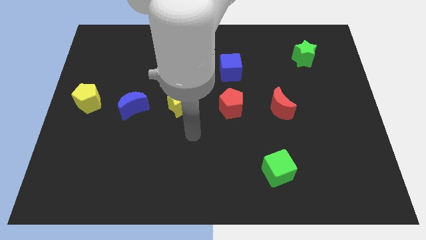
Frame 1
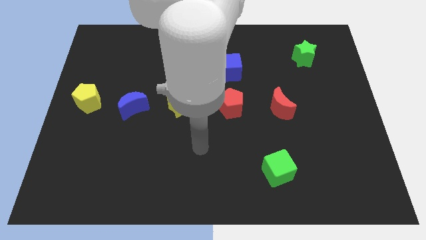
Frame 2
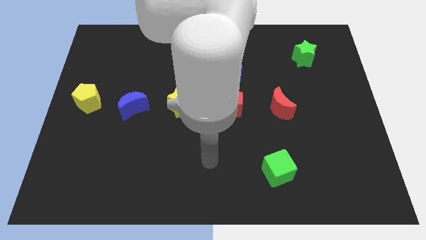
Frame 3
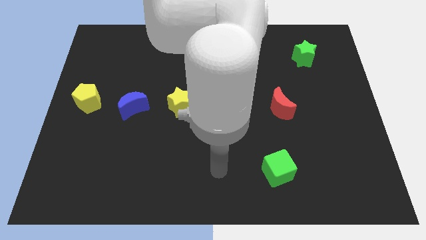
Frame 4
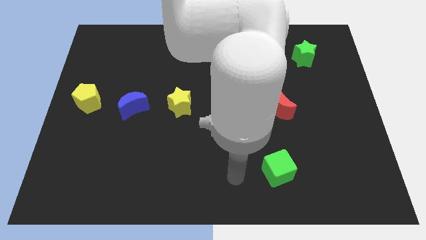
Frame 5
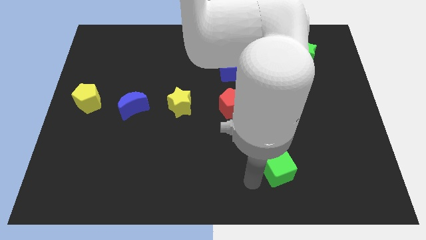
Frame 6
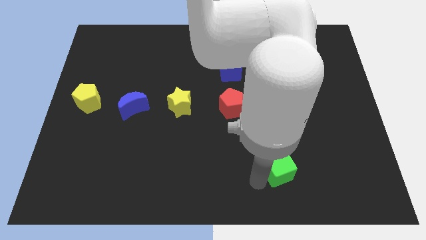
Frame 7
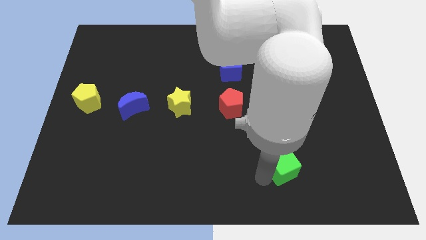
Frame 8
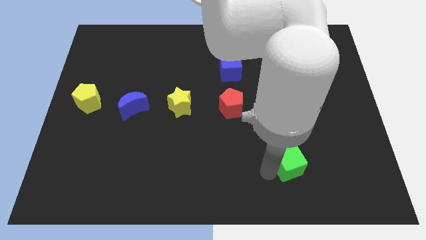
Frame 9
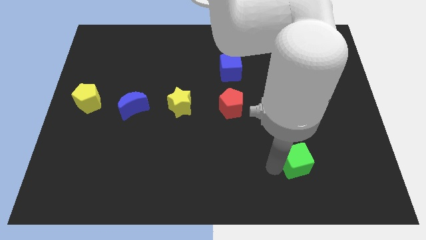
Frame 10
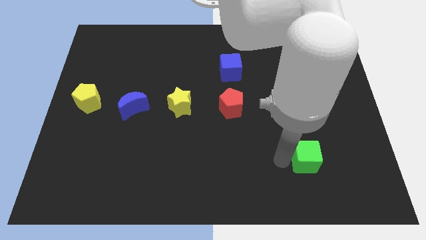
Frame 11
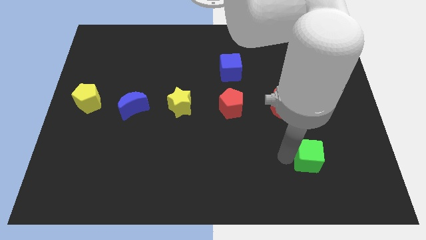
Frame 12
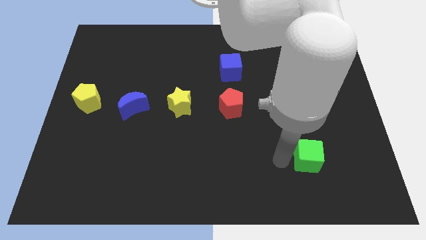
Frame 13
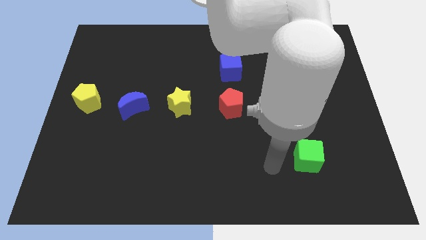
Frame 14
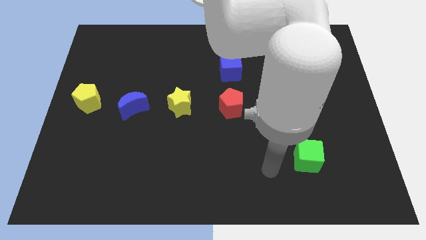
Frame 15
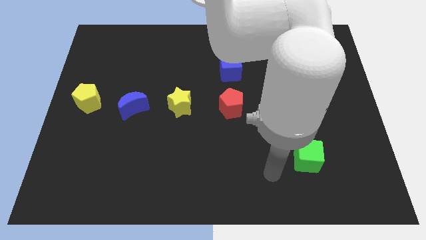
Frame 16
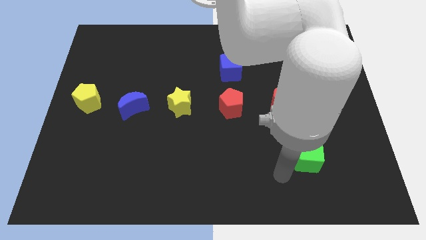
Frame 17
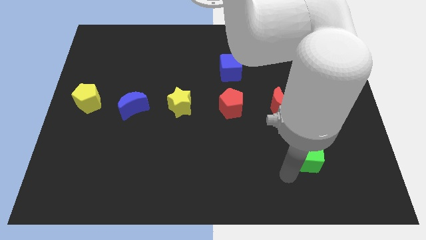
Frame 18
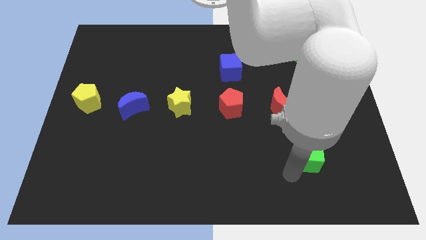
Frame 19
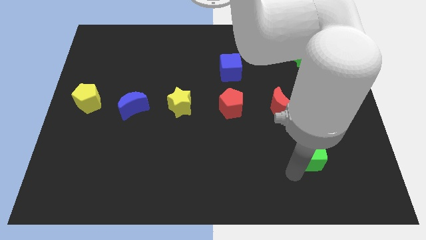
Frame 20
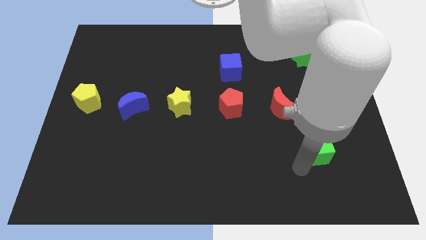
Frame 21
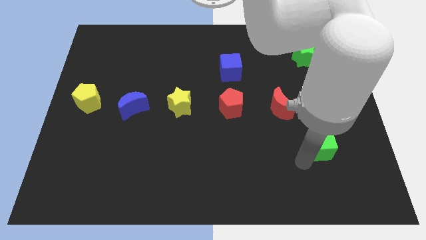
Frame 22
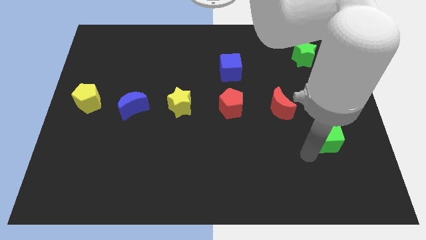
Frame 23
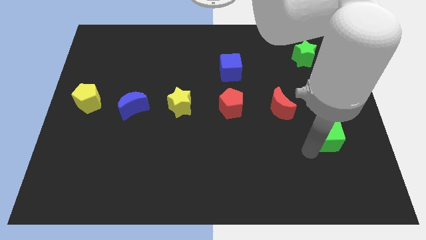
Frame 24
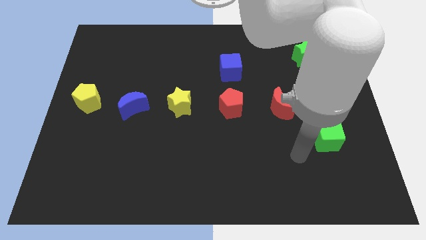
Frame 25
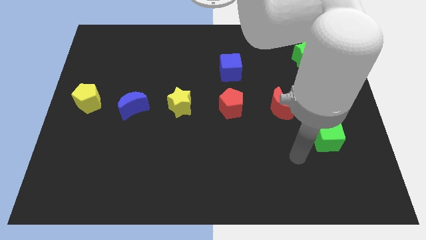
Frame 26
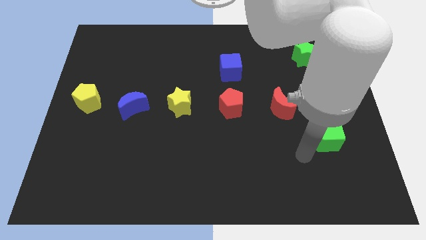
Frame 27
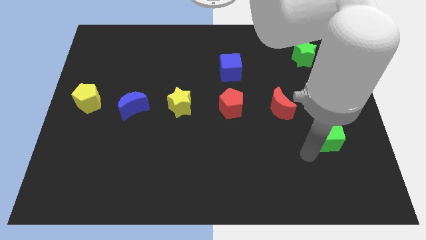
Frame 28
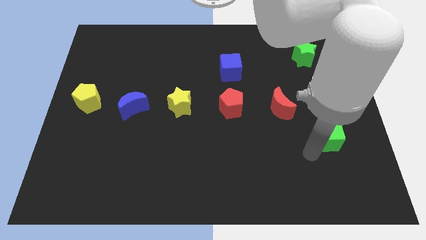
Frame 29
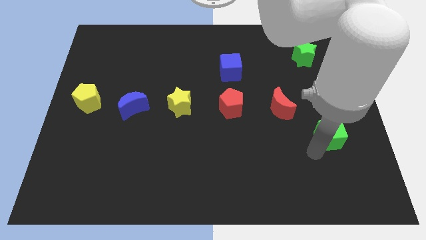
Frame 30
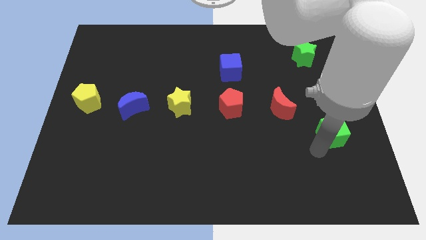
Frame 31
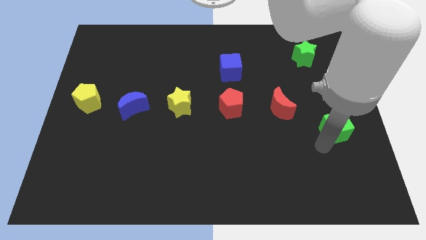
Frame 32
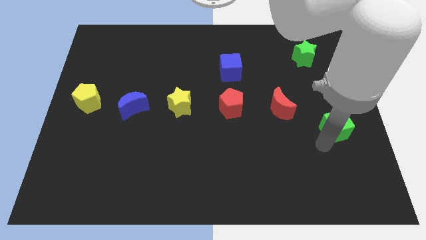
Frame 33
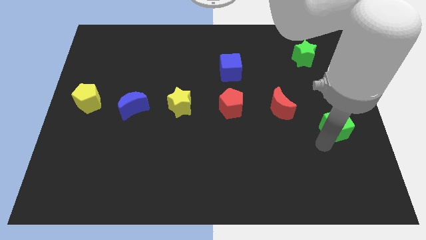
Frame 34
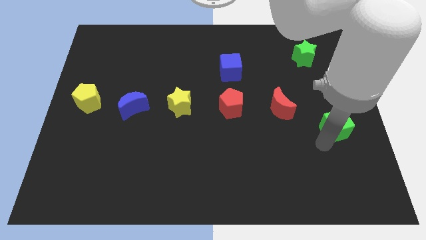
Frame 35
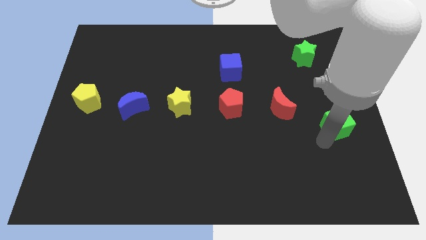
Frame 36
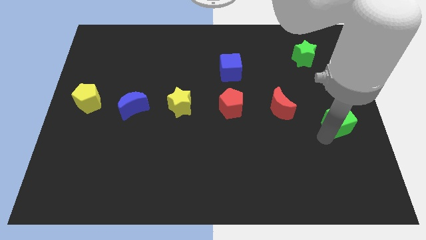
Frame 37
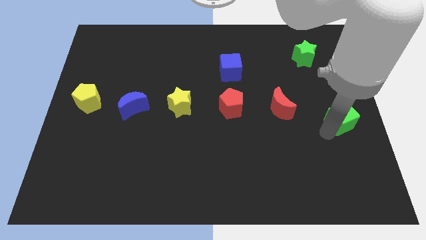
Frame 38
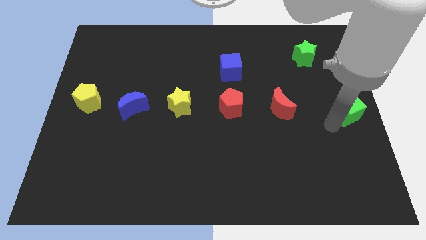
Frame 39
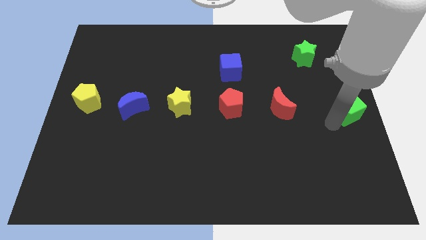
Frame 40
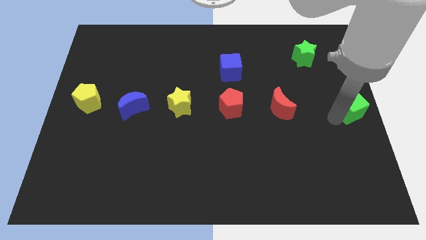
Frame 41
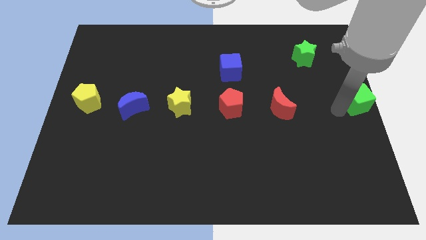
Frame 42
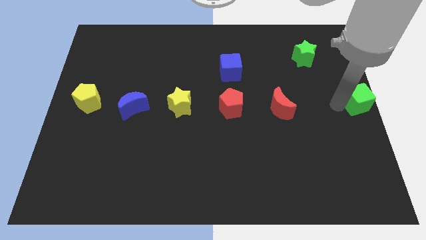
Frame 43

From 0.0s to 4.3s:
push the green cube to the right center of the board

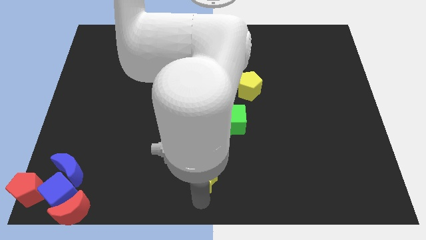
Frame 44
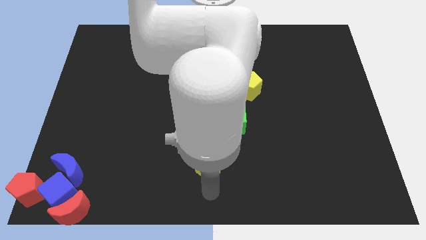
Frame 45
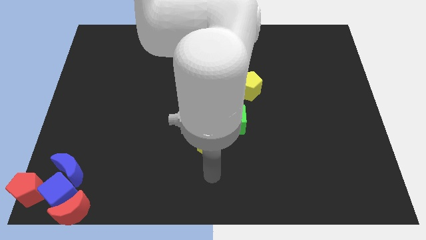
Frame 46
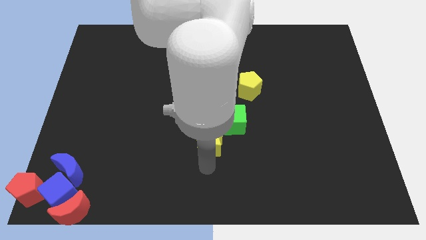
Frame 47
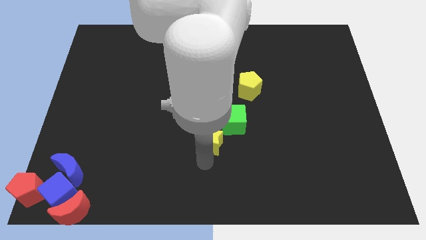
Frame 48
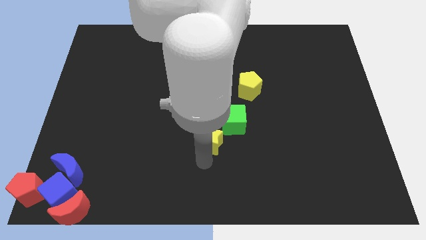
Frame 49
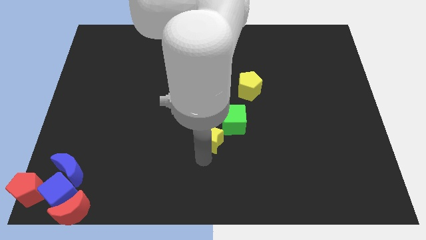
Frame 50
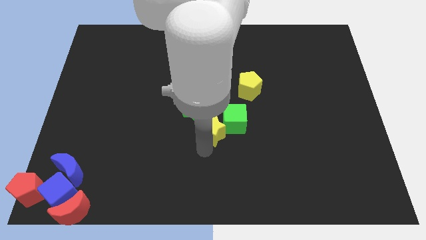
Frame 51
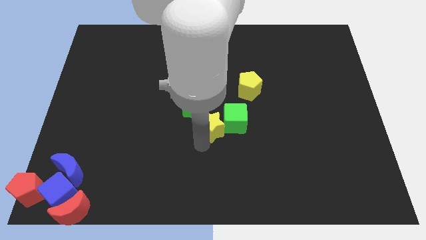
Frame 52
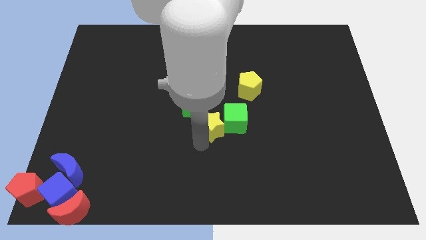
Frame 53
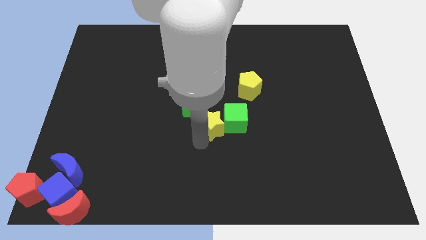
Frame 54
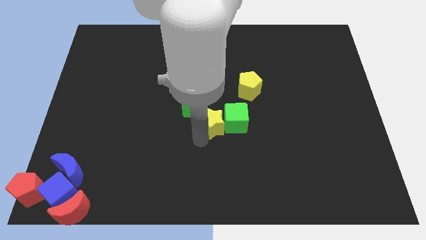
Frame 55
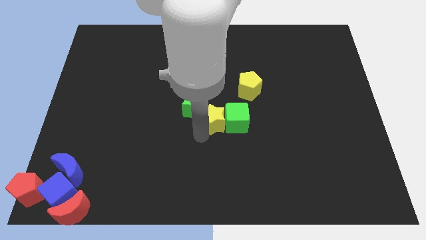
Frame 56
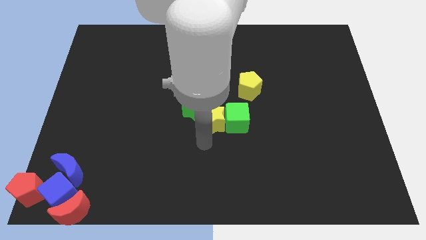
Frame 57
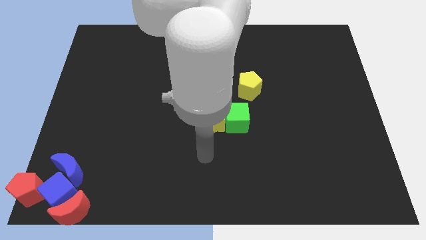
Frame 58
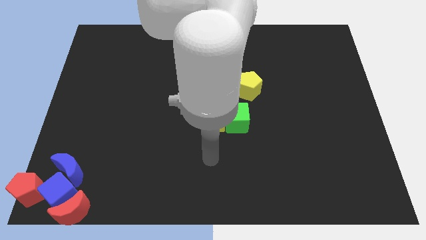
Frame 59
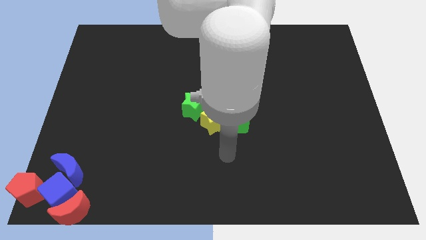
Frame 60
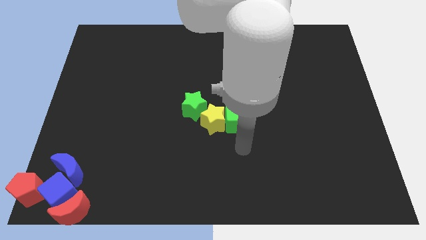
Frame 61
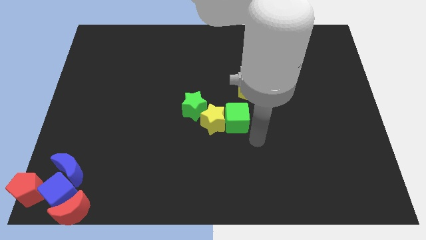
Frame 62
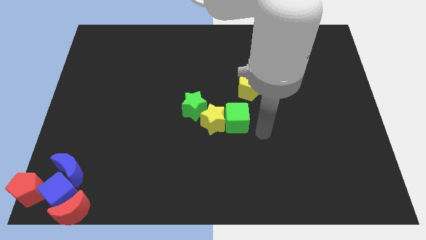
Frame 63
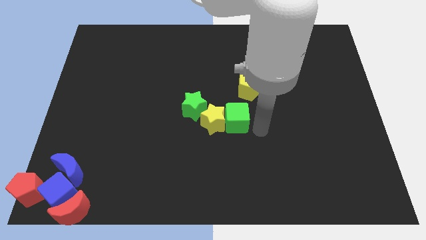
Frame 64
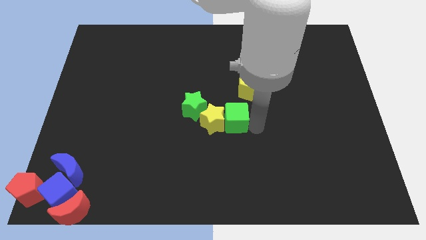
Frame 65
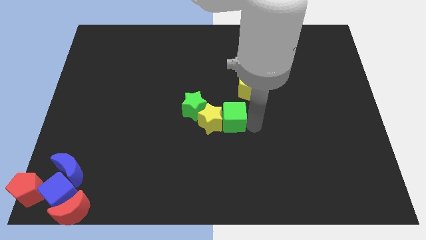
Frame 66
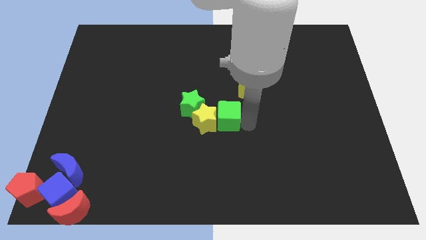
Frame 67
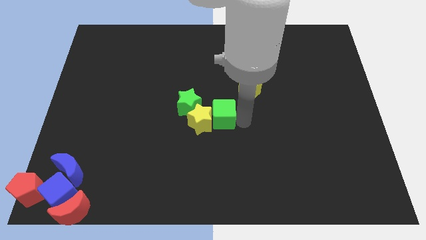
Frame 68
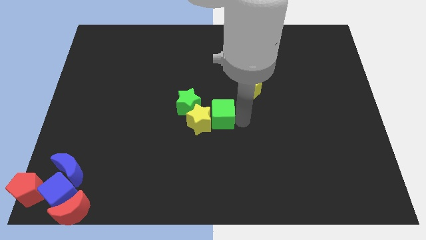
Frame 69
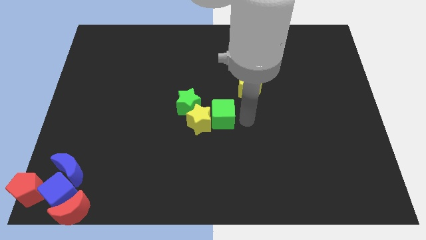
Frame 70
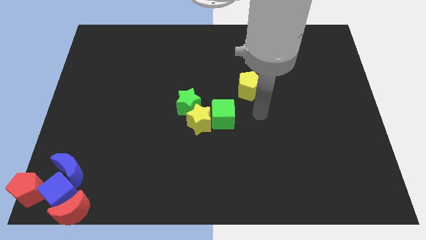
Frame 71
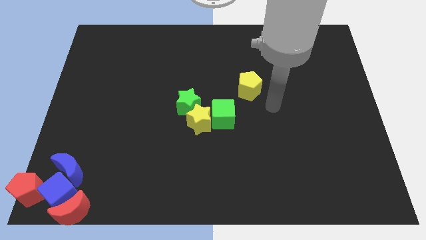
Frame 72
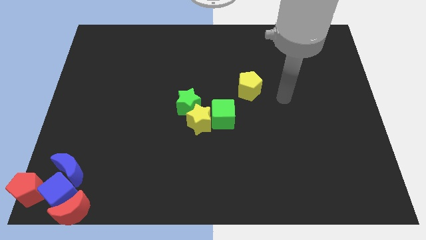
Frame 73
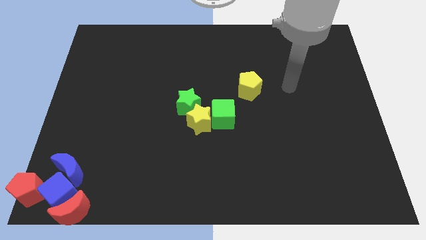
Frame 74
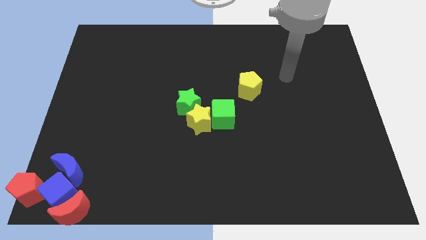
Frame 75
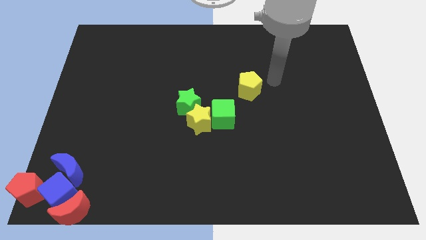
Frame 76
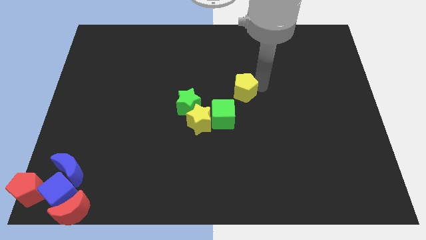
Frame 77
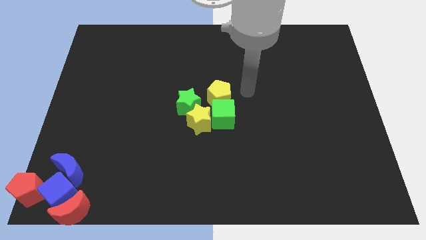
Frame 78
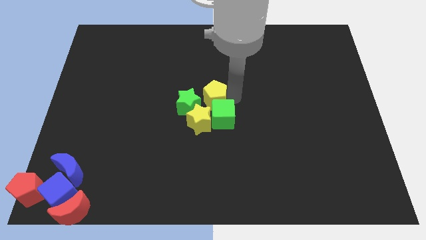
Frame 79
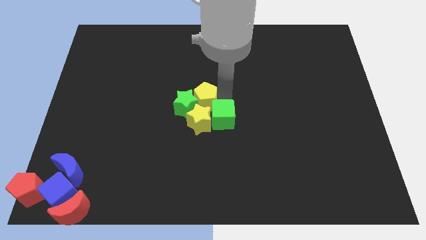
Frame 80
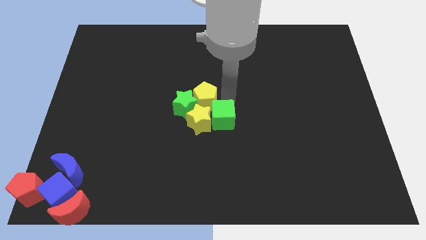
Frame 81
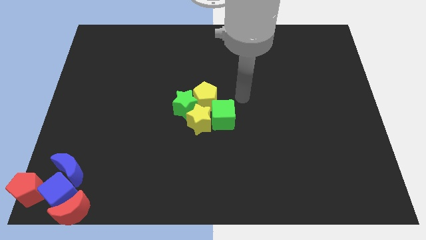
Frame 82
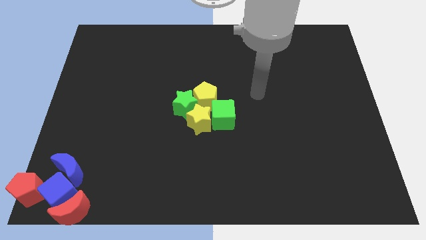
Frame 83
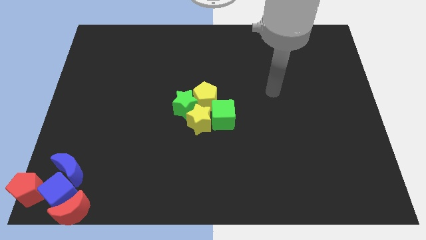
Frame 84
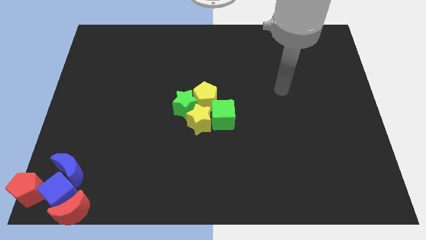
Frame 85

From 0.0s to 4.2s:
move the yellow blocks into the green blocks

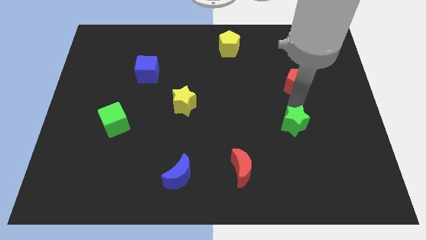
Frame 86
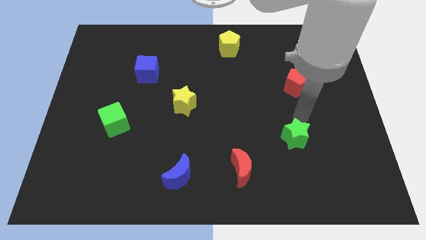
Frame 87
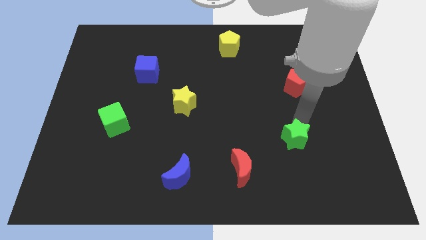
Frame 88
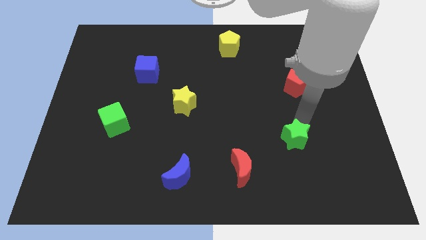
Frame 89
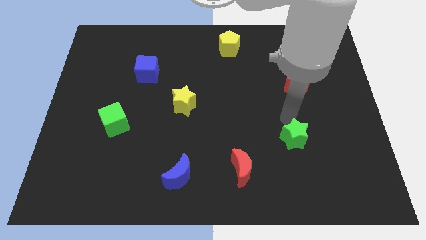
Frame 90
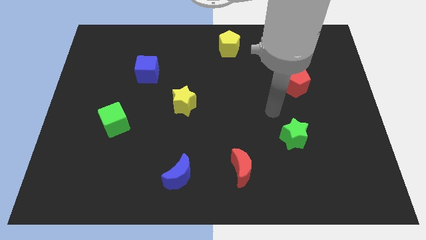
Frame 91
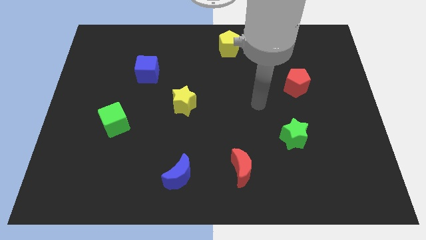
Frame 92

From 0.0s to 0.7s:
move the green star down slightly
